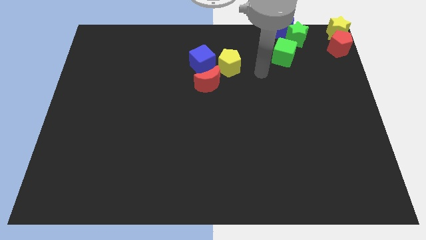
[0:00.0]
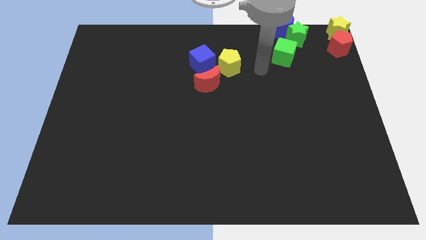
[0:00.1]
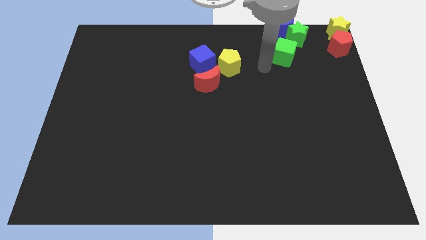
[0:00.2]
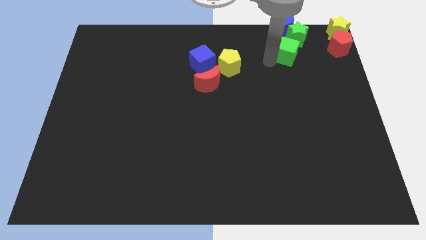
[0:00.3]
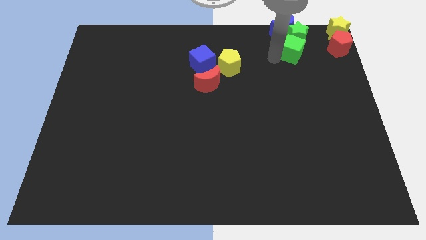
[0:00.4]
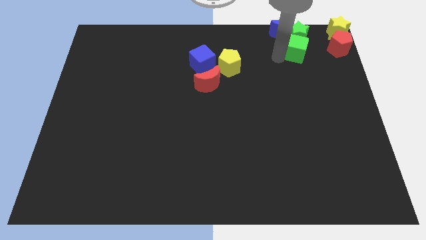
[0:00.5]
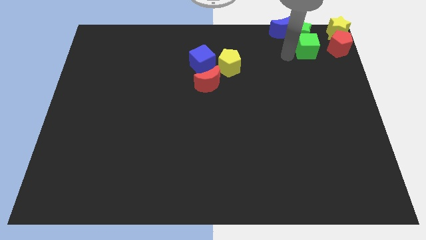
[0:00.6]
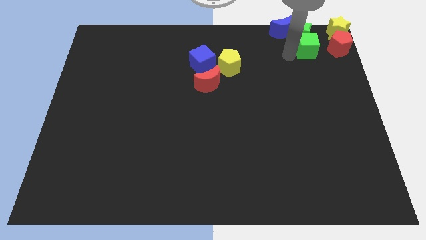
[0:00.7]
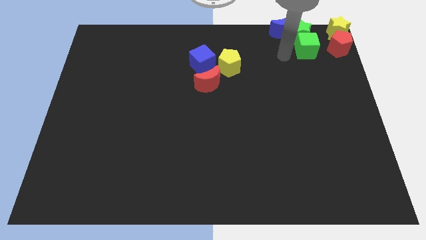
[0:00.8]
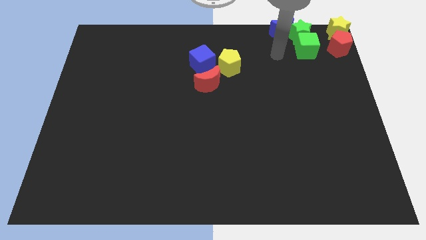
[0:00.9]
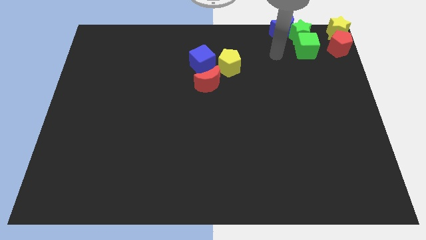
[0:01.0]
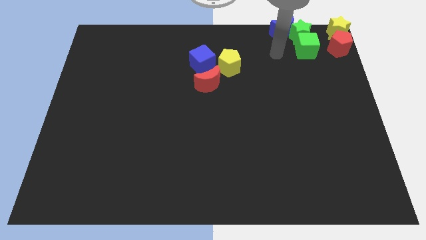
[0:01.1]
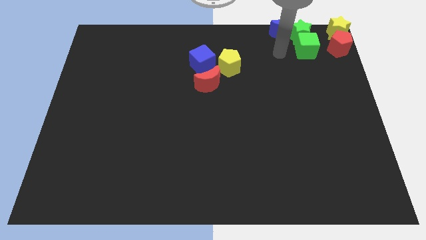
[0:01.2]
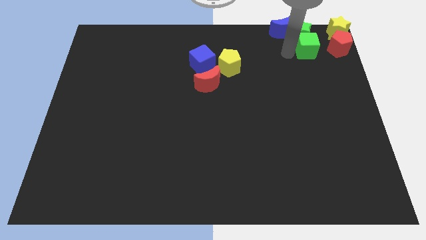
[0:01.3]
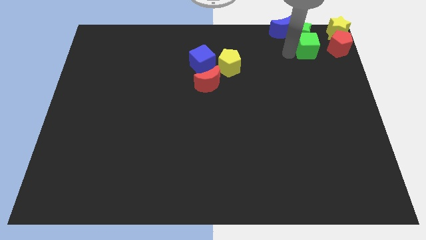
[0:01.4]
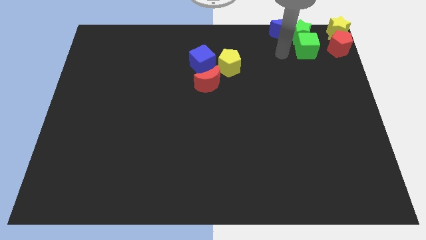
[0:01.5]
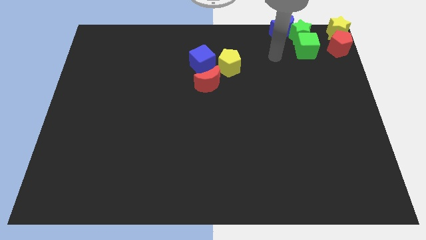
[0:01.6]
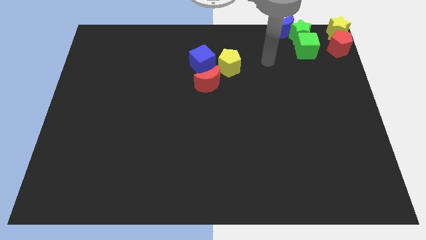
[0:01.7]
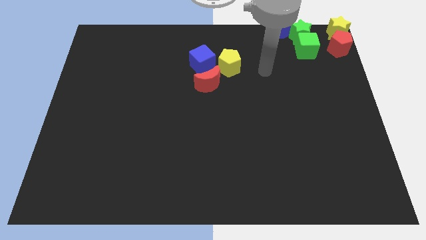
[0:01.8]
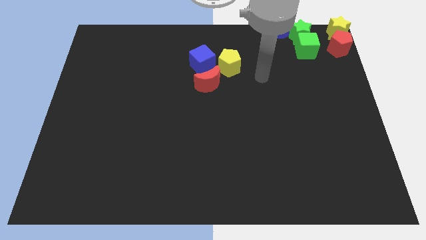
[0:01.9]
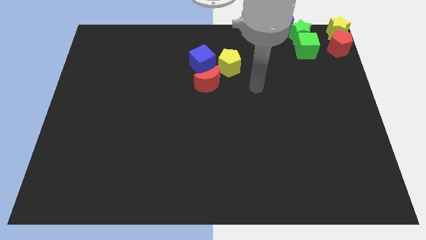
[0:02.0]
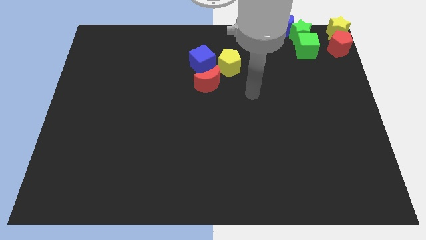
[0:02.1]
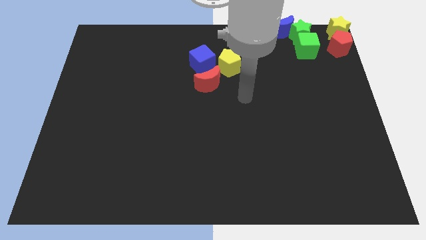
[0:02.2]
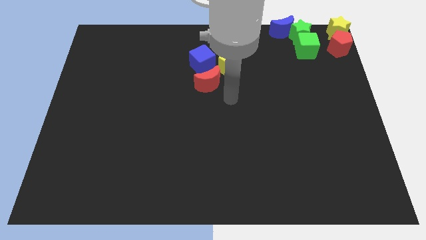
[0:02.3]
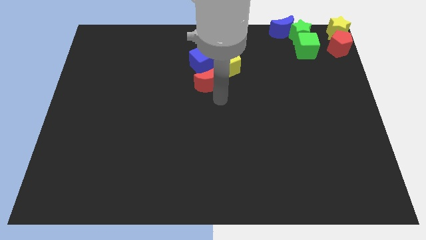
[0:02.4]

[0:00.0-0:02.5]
move the green cube into the green star

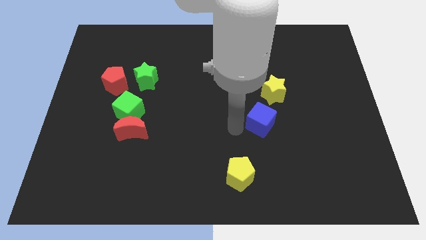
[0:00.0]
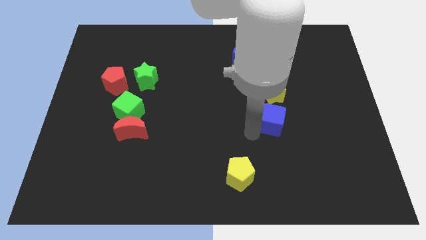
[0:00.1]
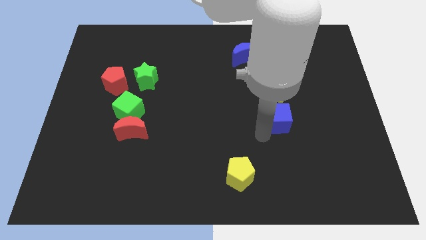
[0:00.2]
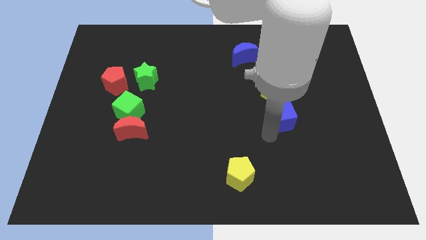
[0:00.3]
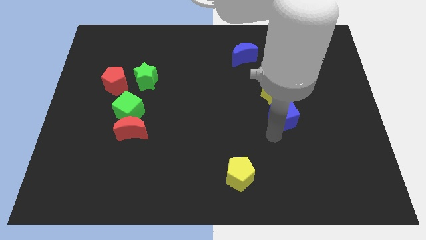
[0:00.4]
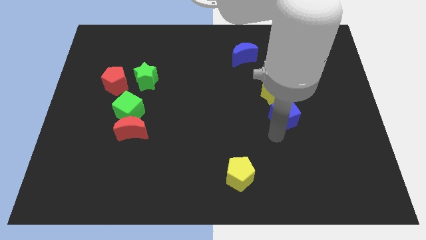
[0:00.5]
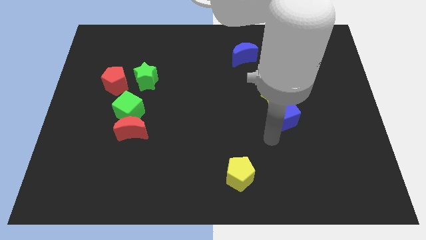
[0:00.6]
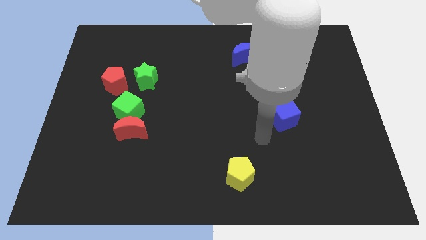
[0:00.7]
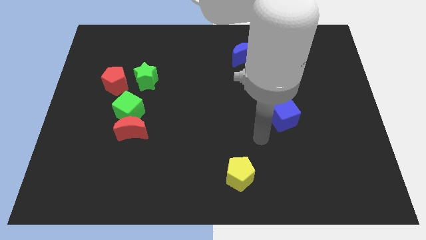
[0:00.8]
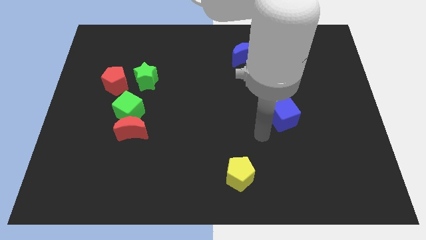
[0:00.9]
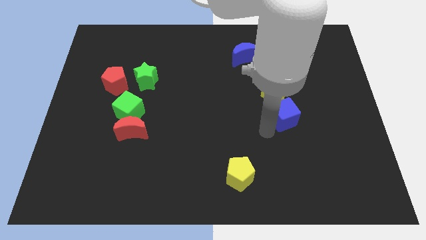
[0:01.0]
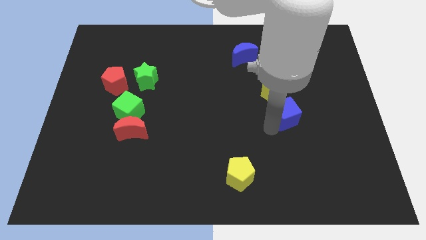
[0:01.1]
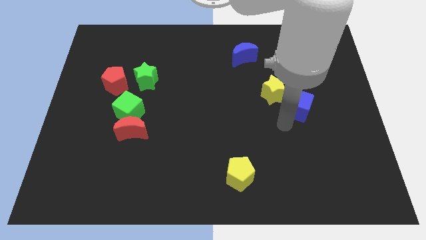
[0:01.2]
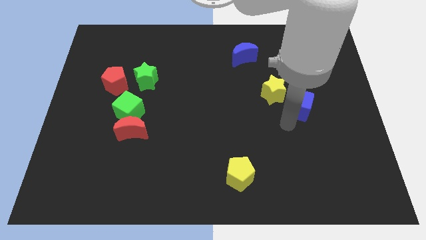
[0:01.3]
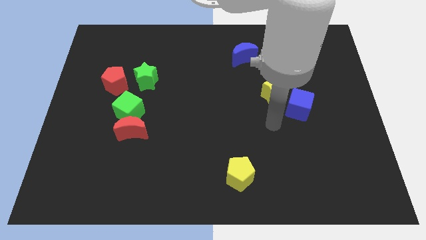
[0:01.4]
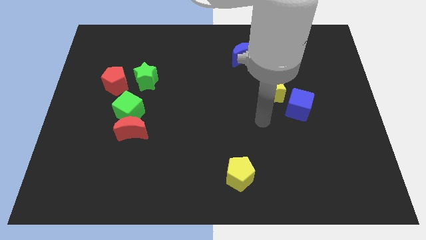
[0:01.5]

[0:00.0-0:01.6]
move the blue cube towards the yellow star

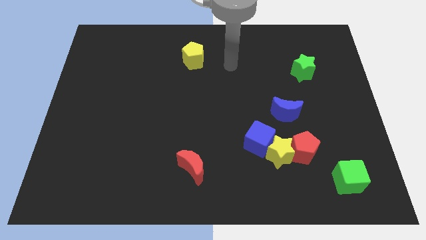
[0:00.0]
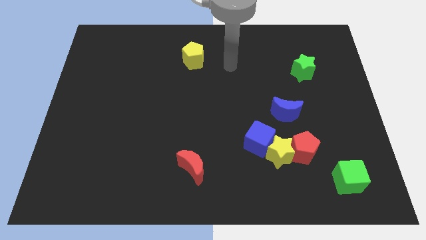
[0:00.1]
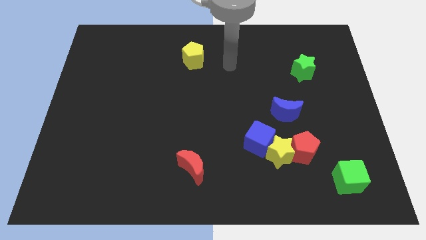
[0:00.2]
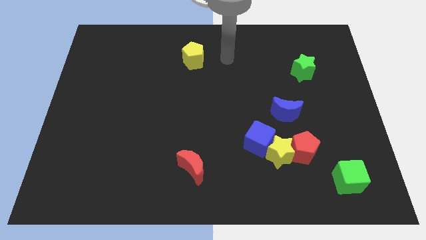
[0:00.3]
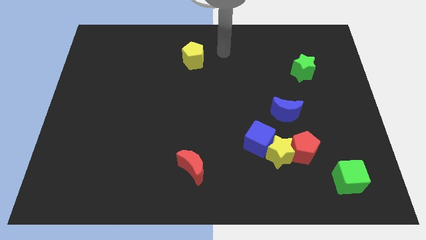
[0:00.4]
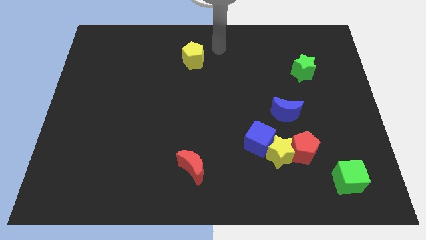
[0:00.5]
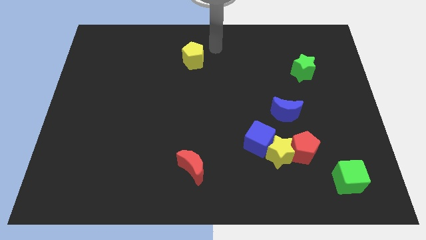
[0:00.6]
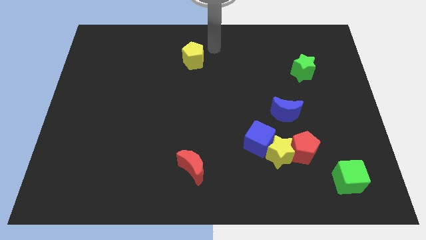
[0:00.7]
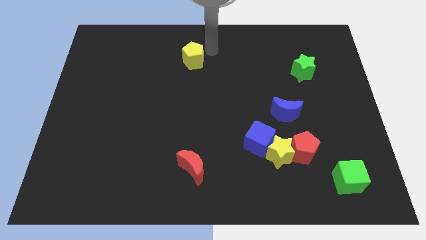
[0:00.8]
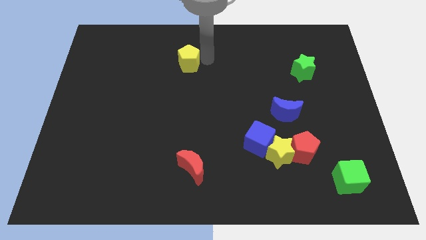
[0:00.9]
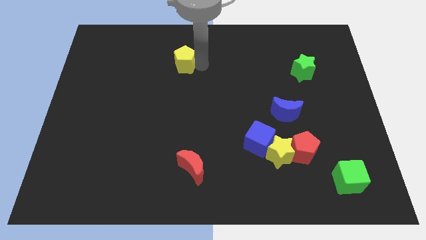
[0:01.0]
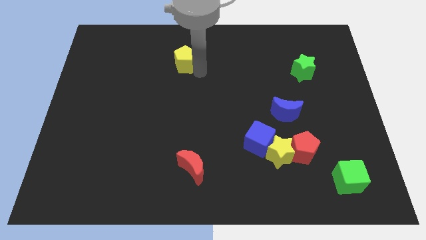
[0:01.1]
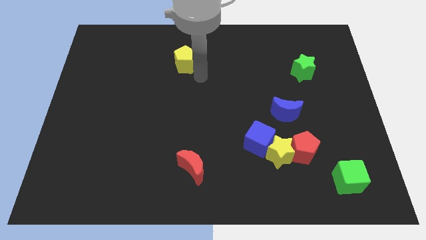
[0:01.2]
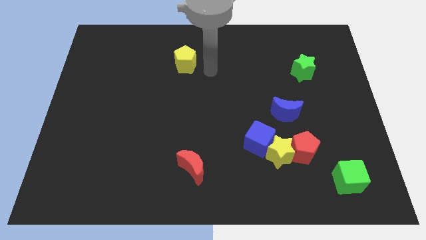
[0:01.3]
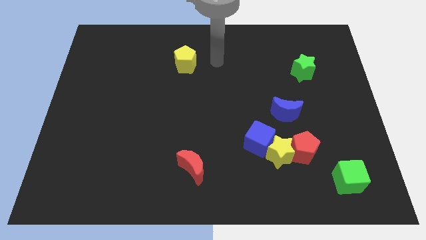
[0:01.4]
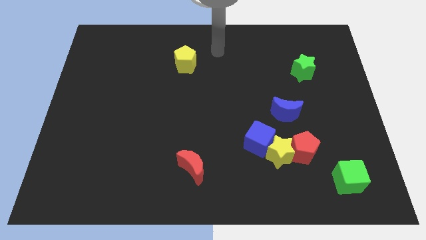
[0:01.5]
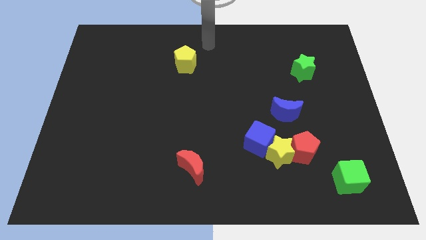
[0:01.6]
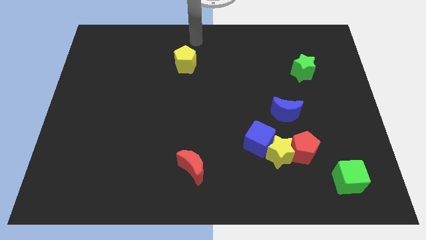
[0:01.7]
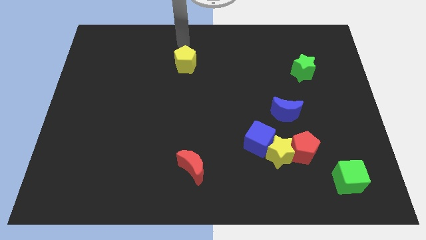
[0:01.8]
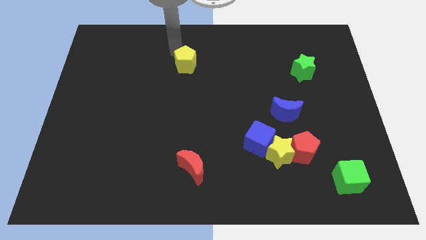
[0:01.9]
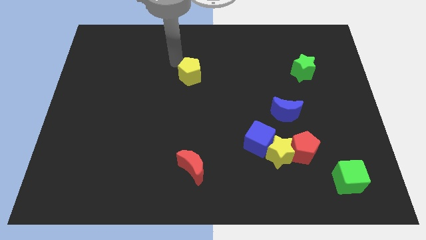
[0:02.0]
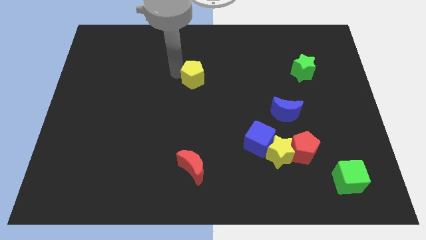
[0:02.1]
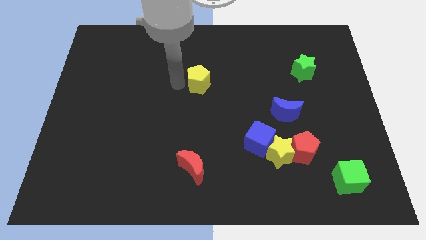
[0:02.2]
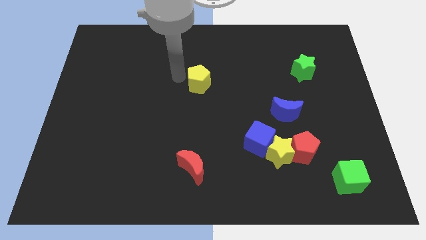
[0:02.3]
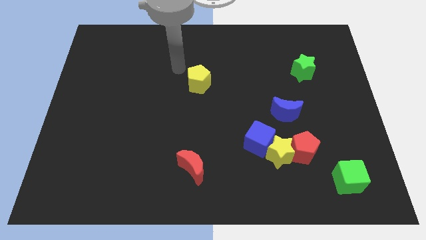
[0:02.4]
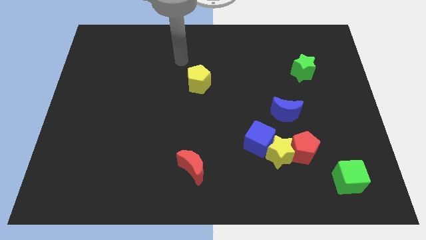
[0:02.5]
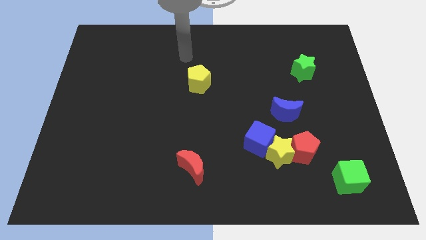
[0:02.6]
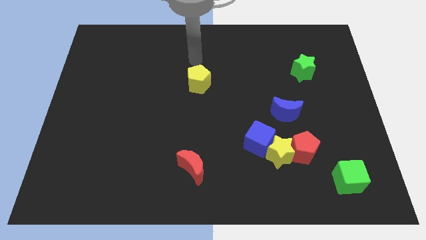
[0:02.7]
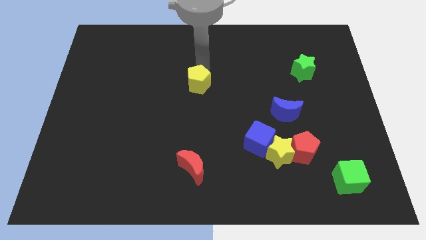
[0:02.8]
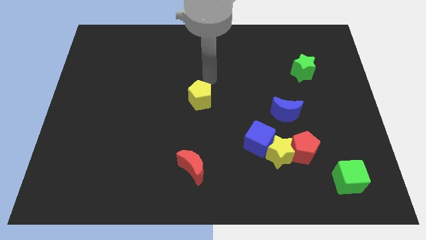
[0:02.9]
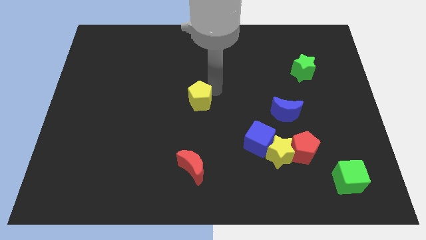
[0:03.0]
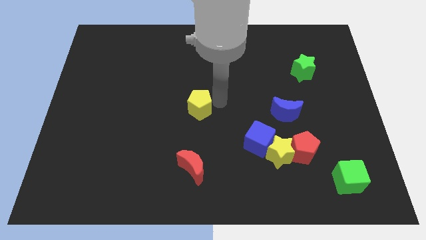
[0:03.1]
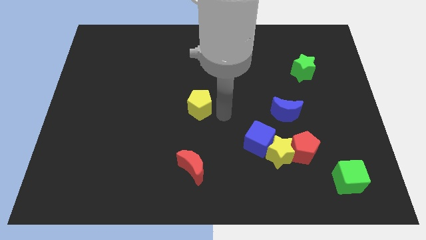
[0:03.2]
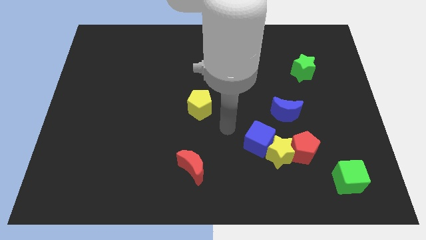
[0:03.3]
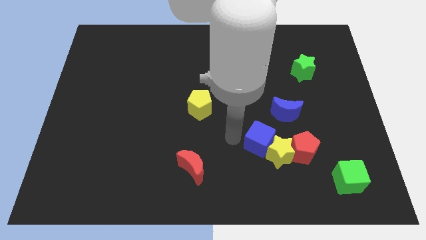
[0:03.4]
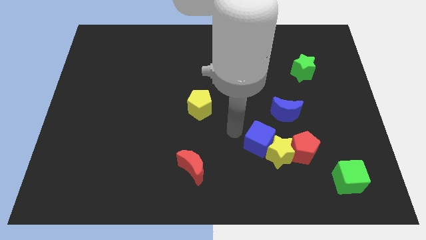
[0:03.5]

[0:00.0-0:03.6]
place the yellow pentagon above the red moon

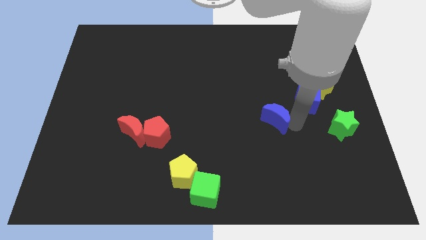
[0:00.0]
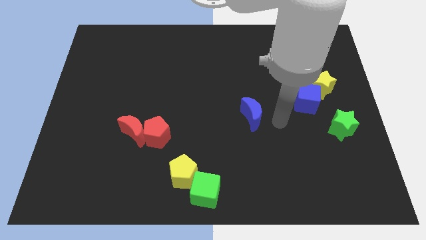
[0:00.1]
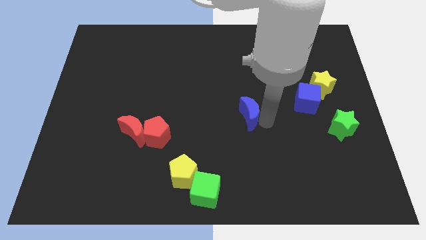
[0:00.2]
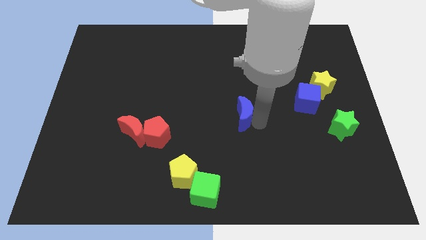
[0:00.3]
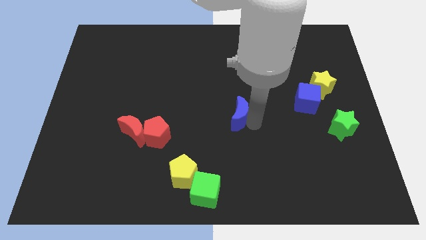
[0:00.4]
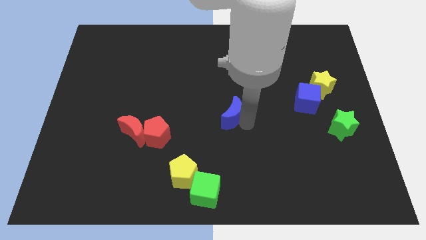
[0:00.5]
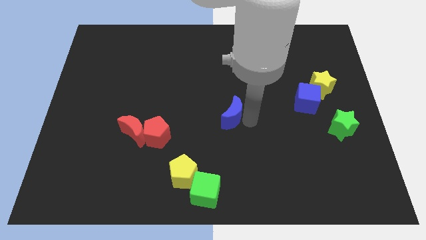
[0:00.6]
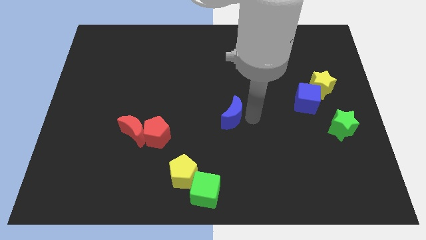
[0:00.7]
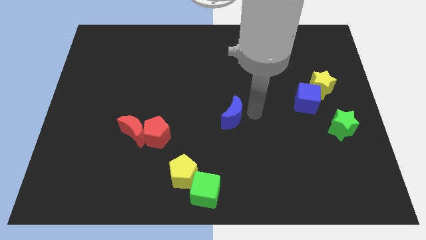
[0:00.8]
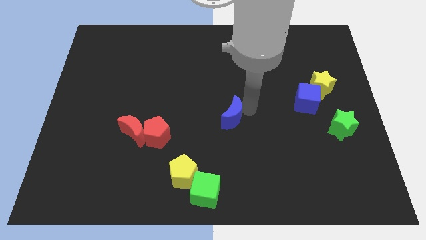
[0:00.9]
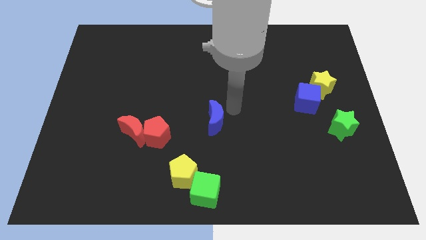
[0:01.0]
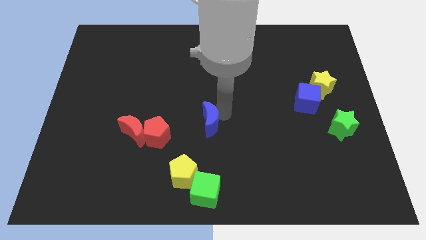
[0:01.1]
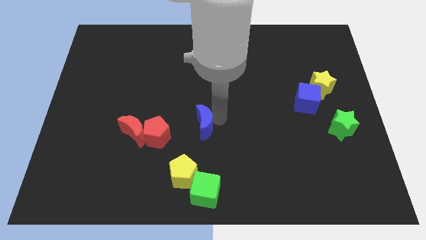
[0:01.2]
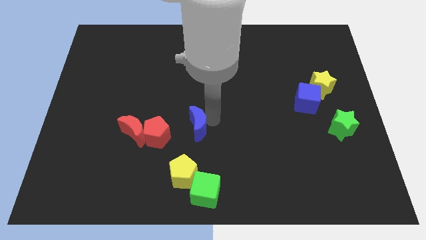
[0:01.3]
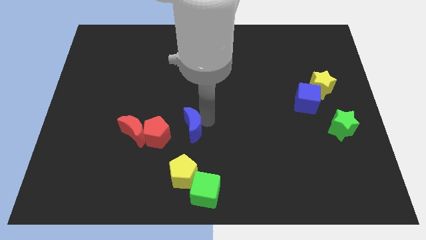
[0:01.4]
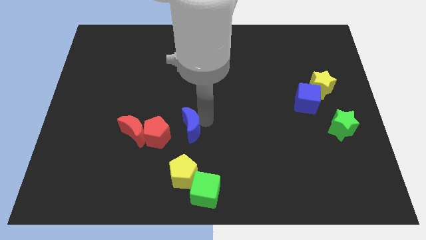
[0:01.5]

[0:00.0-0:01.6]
move the blue crescent towards red blocks
